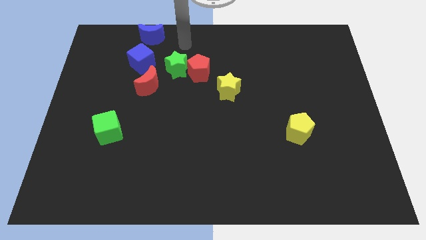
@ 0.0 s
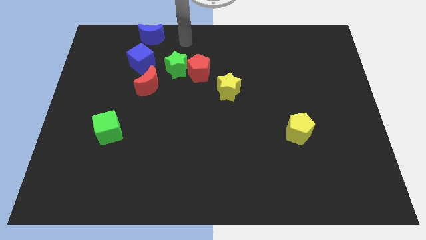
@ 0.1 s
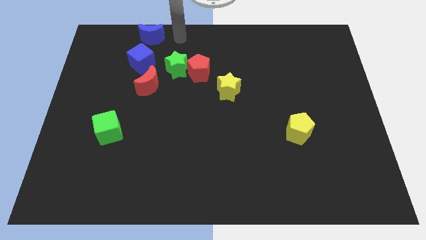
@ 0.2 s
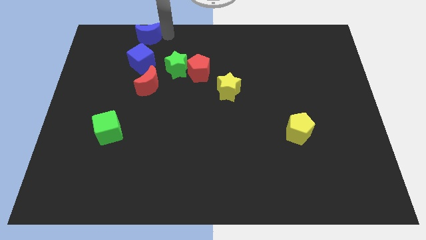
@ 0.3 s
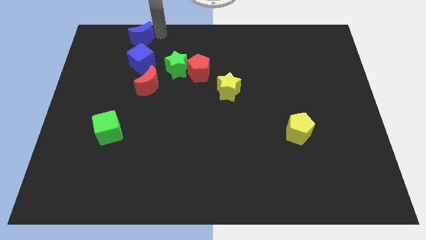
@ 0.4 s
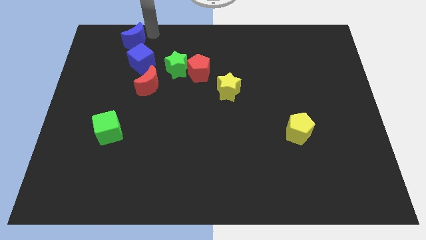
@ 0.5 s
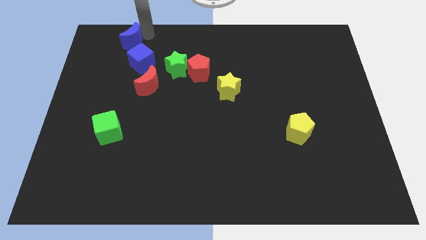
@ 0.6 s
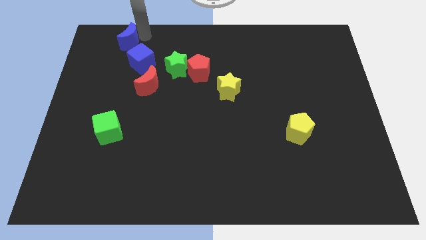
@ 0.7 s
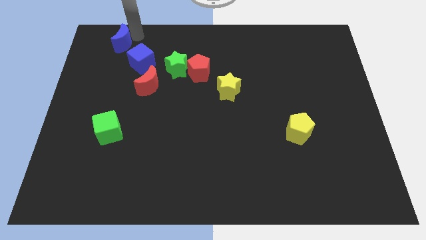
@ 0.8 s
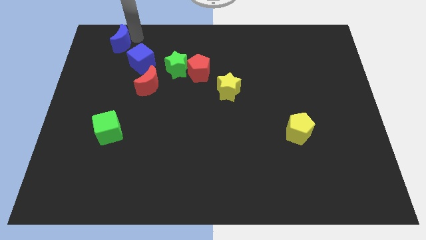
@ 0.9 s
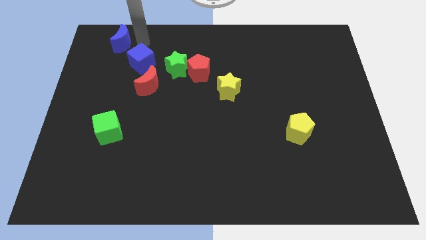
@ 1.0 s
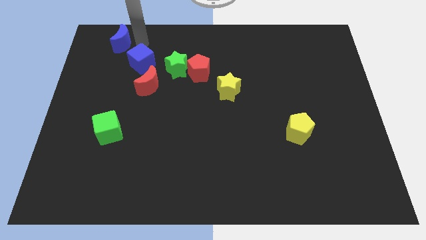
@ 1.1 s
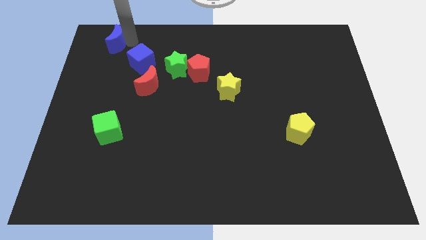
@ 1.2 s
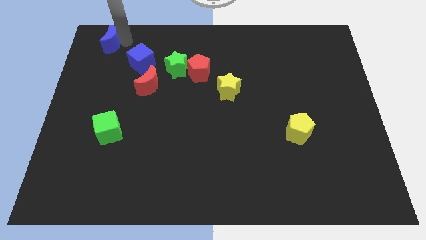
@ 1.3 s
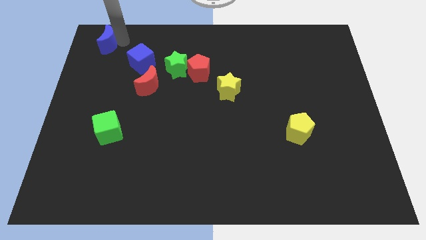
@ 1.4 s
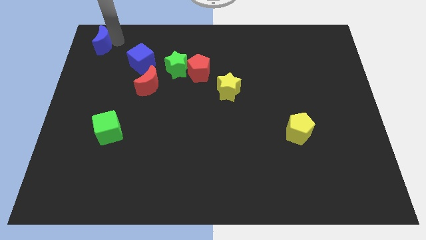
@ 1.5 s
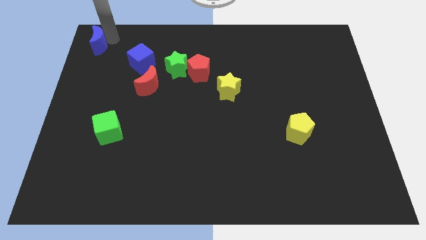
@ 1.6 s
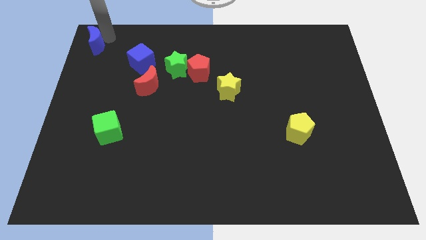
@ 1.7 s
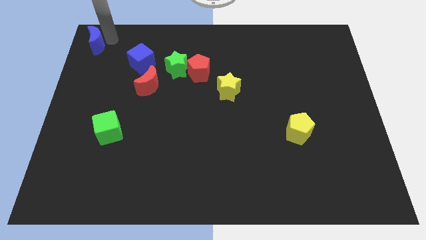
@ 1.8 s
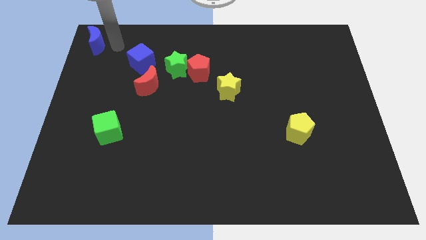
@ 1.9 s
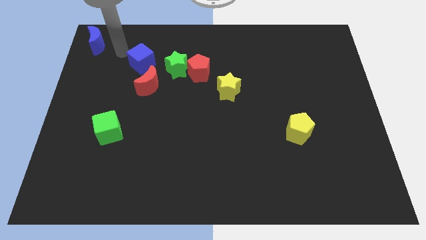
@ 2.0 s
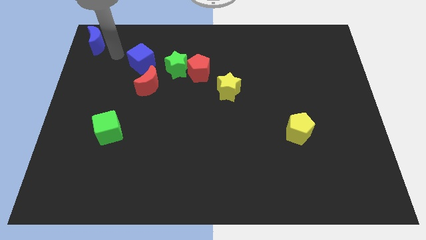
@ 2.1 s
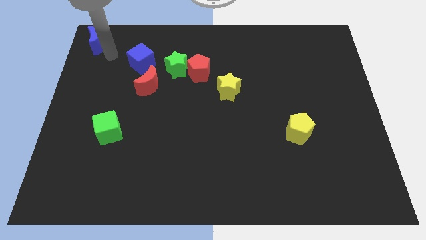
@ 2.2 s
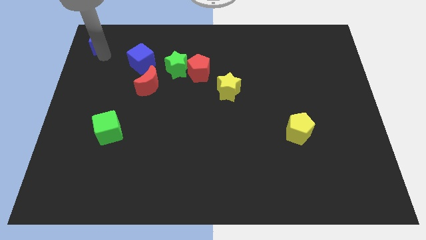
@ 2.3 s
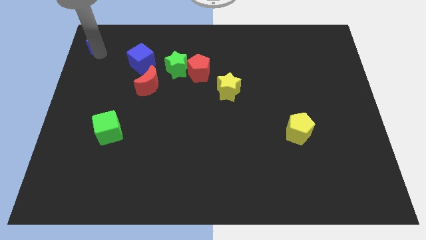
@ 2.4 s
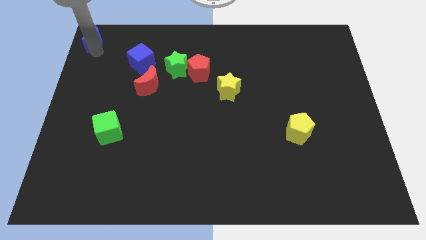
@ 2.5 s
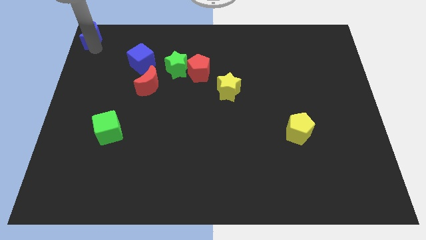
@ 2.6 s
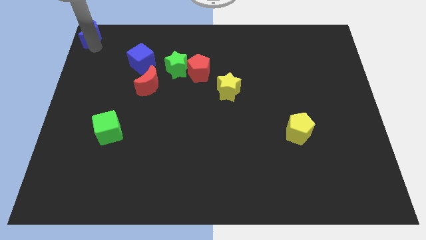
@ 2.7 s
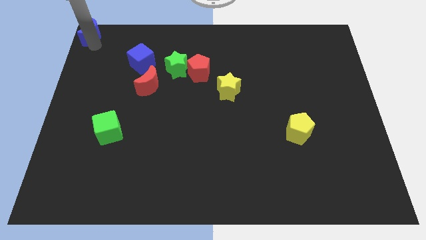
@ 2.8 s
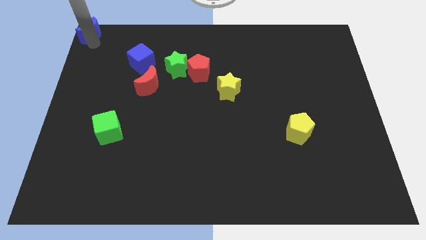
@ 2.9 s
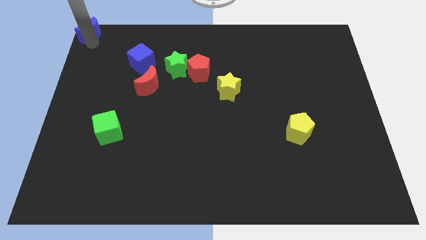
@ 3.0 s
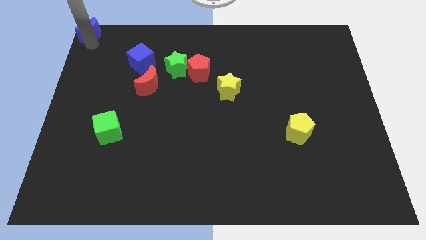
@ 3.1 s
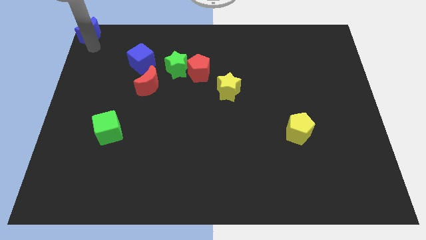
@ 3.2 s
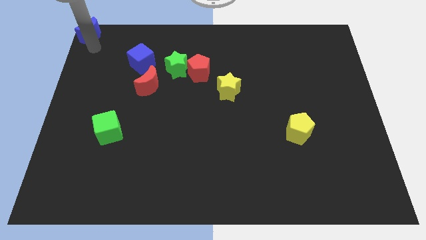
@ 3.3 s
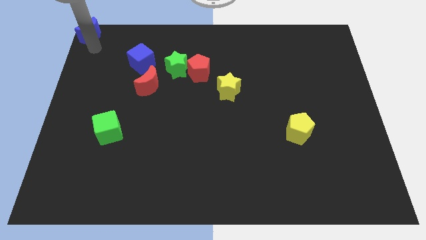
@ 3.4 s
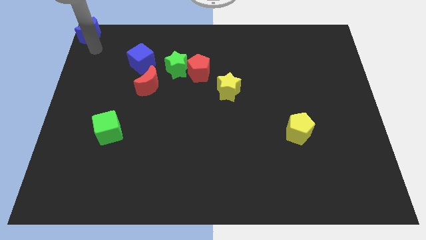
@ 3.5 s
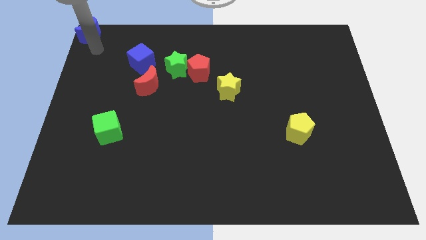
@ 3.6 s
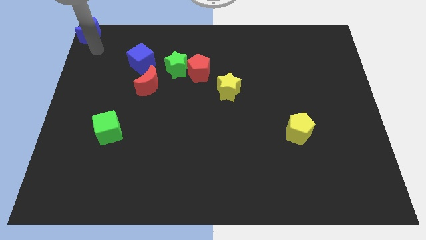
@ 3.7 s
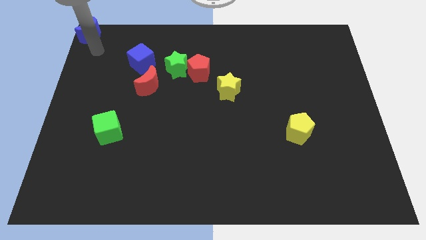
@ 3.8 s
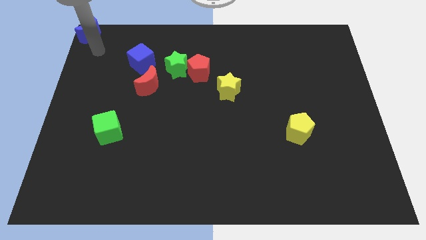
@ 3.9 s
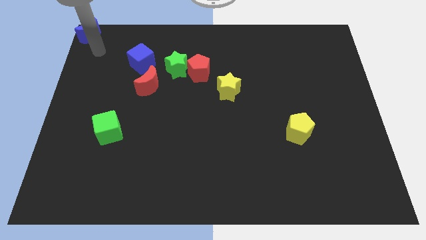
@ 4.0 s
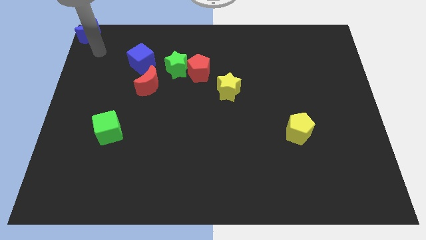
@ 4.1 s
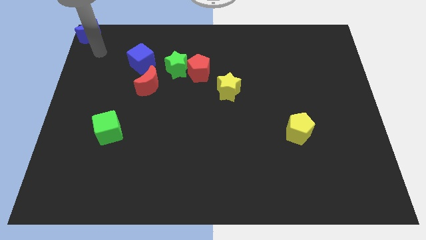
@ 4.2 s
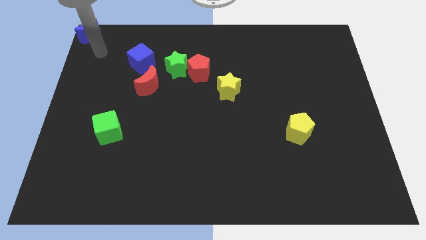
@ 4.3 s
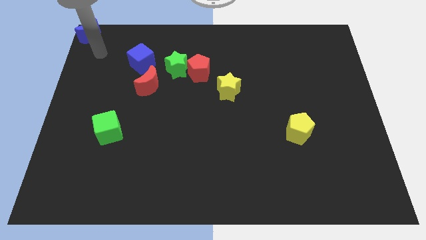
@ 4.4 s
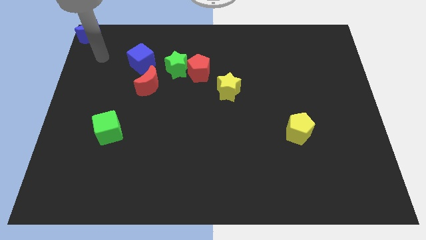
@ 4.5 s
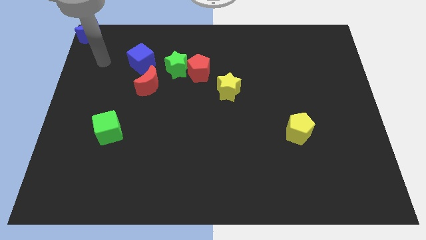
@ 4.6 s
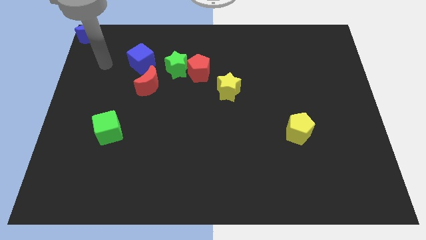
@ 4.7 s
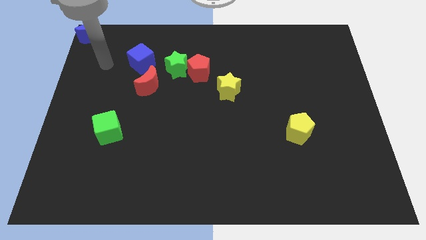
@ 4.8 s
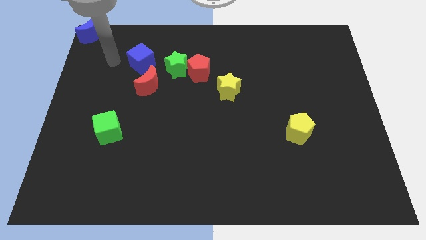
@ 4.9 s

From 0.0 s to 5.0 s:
push the blue crescent to the top left of the board

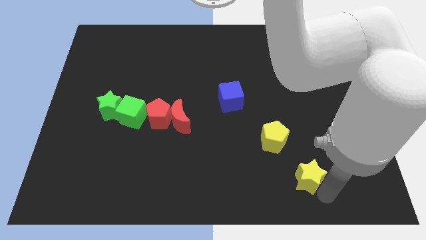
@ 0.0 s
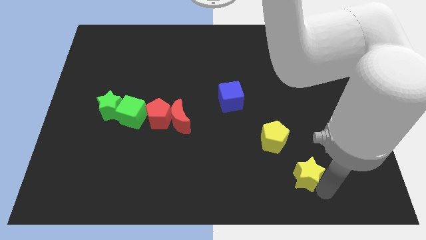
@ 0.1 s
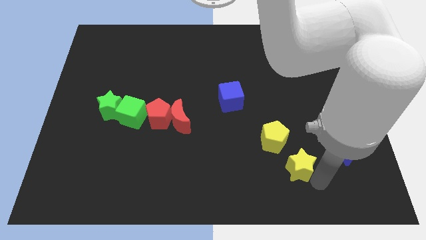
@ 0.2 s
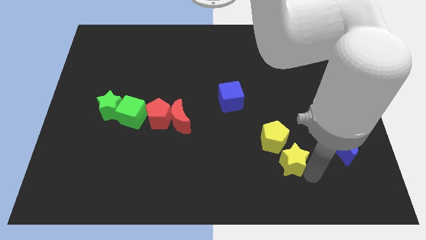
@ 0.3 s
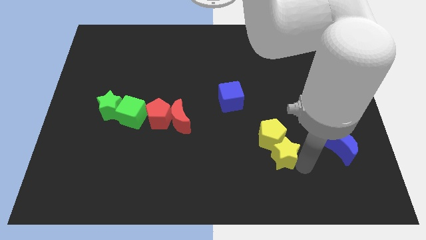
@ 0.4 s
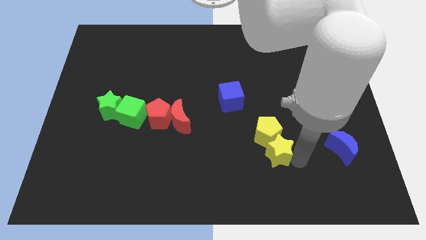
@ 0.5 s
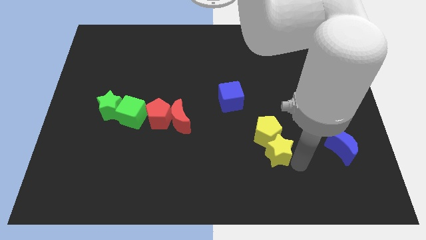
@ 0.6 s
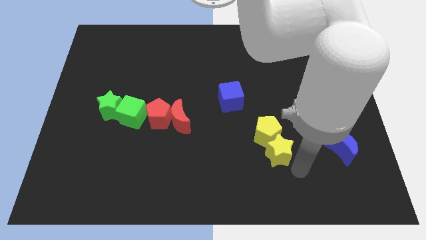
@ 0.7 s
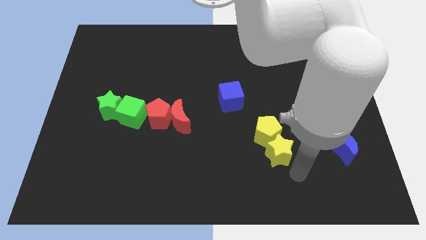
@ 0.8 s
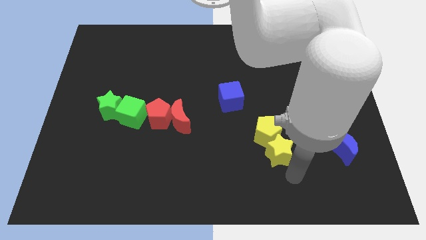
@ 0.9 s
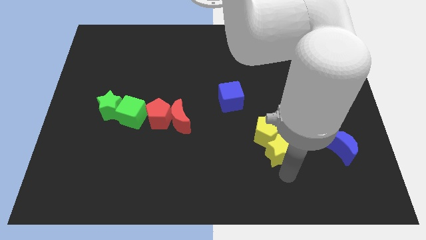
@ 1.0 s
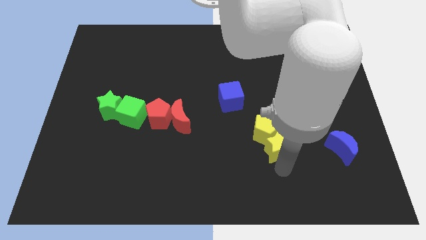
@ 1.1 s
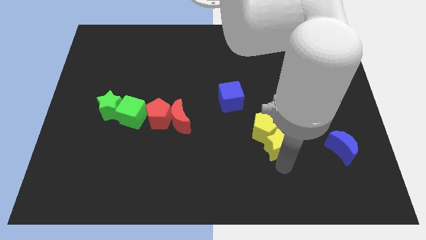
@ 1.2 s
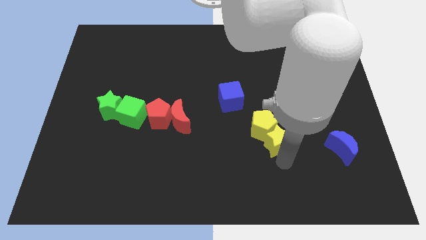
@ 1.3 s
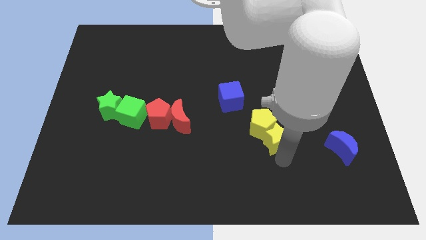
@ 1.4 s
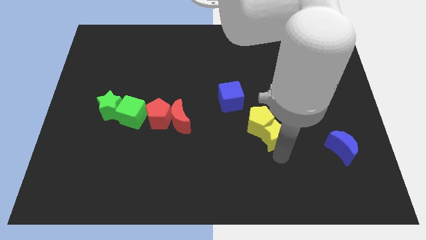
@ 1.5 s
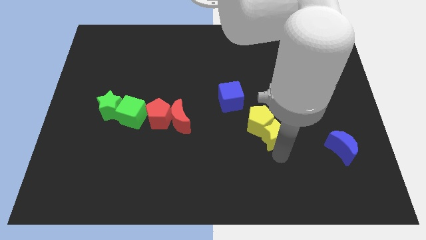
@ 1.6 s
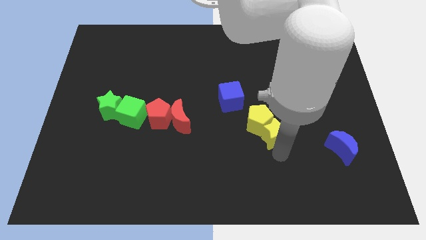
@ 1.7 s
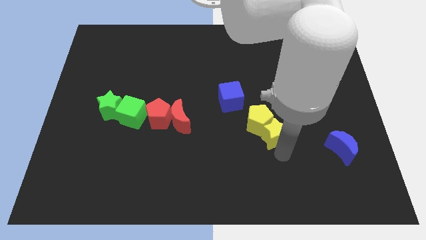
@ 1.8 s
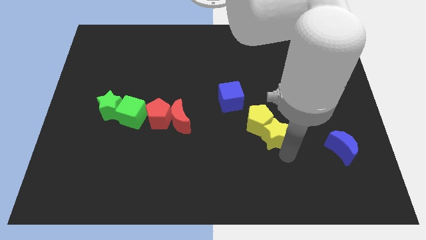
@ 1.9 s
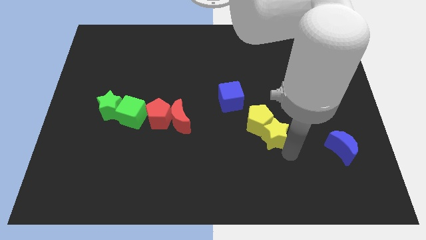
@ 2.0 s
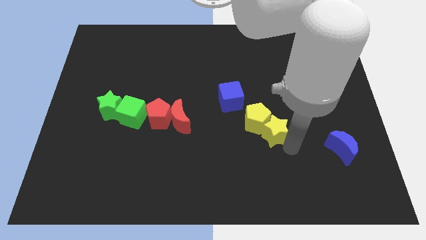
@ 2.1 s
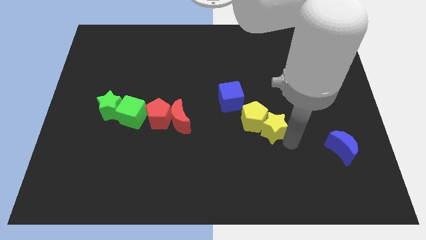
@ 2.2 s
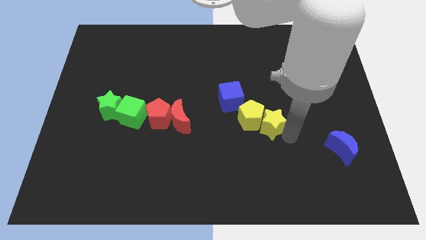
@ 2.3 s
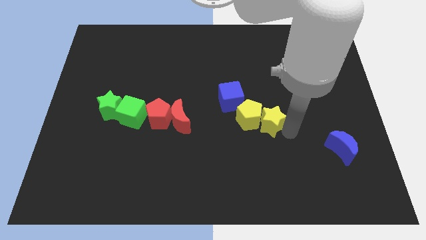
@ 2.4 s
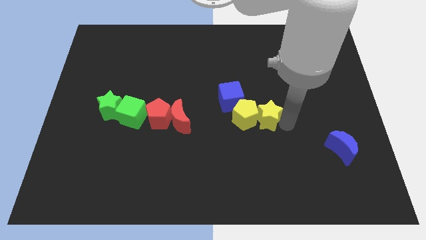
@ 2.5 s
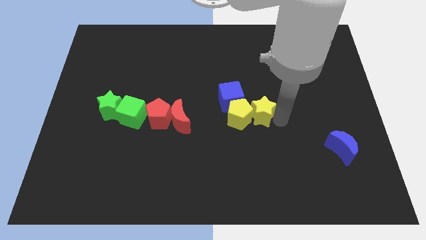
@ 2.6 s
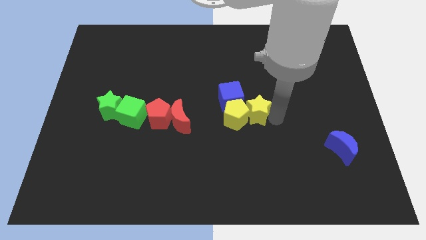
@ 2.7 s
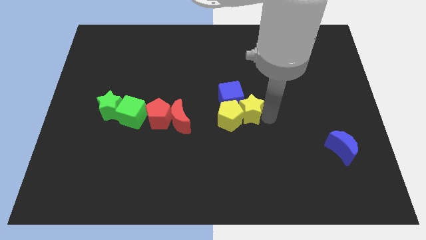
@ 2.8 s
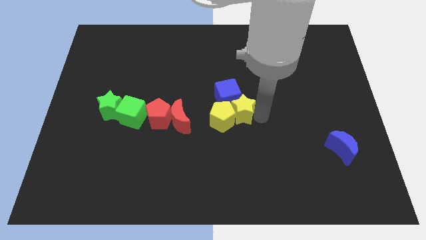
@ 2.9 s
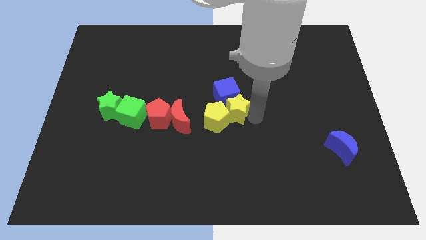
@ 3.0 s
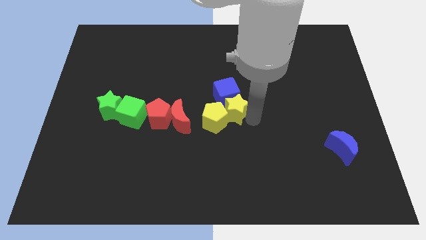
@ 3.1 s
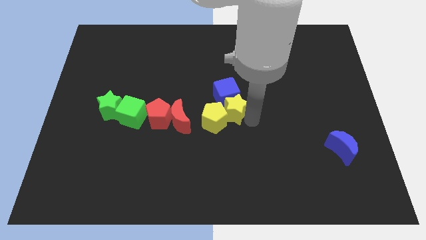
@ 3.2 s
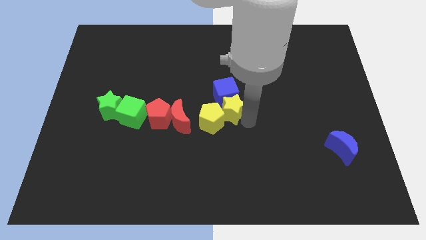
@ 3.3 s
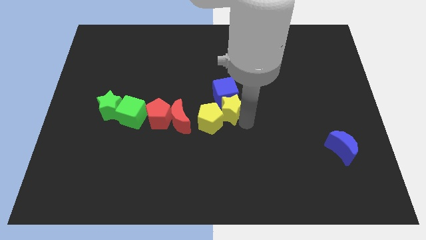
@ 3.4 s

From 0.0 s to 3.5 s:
place yellow blocks below blue cube

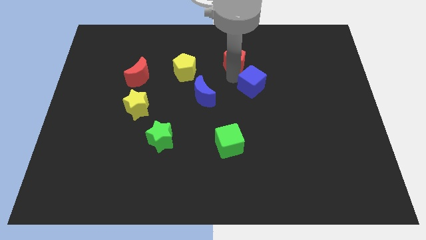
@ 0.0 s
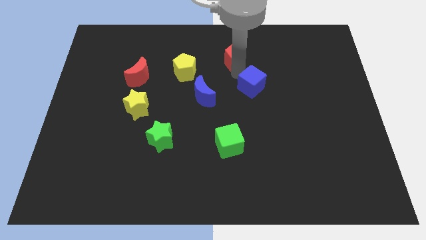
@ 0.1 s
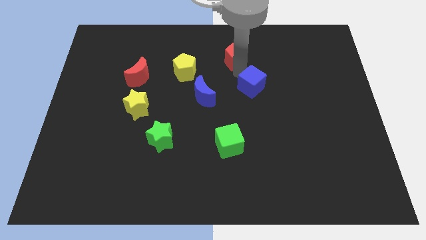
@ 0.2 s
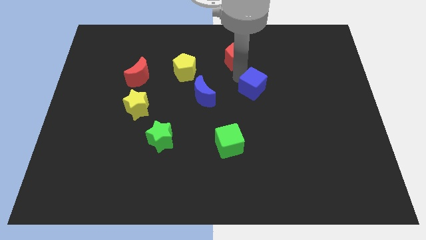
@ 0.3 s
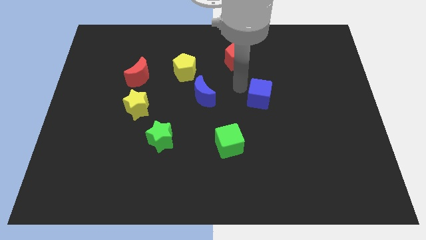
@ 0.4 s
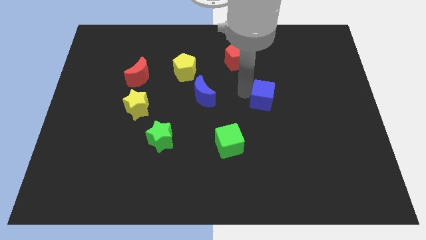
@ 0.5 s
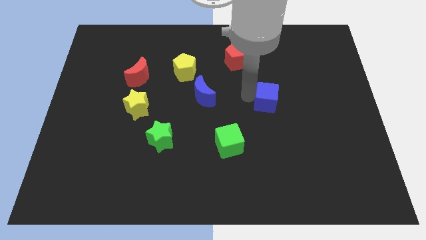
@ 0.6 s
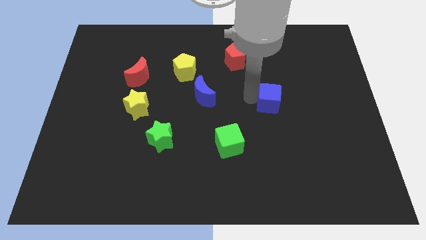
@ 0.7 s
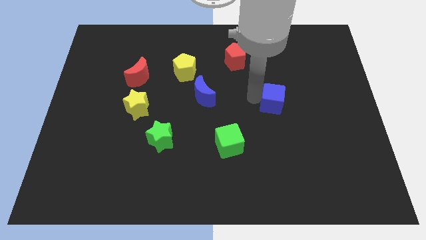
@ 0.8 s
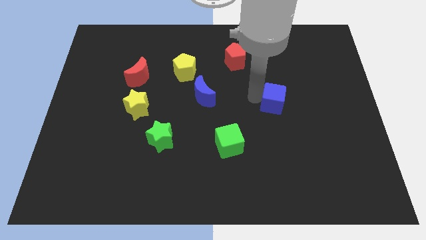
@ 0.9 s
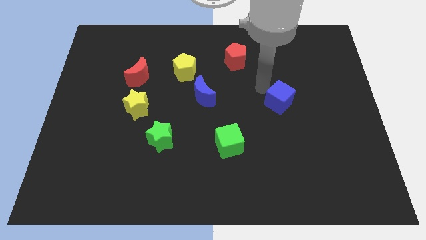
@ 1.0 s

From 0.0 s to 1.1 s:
move the blue cube slightly down
